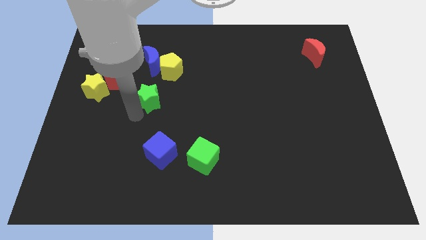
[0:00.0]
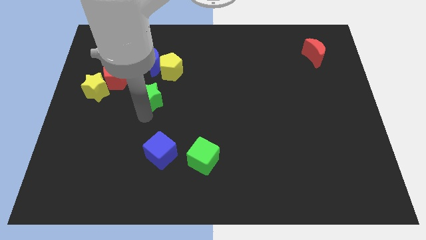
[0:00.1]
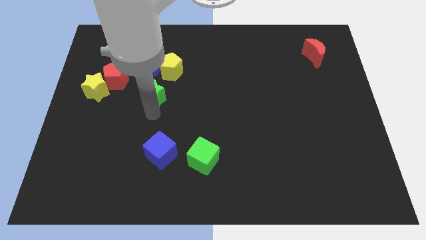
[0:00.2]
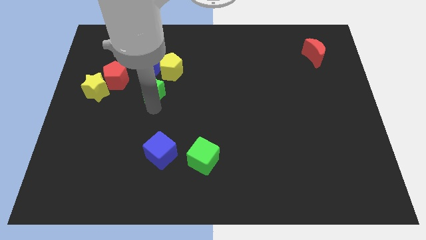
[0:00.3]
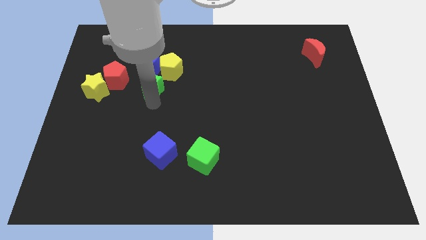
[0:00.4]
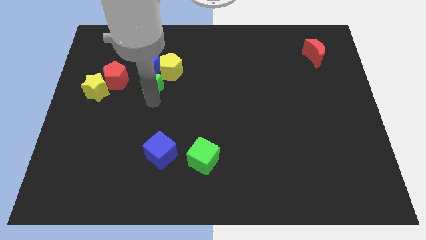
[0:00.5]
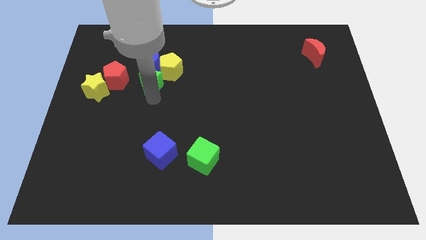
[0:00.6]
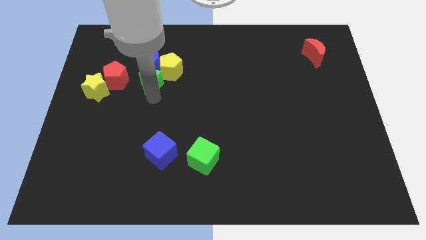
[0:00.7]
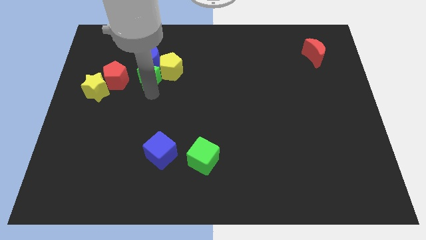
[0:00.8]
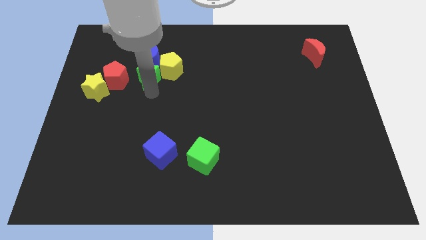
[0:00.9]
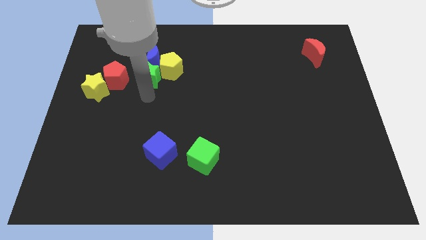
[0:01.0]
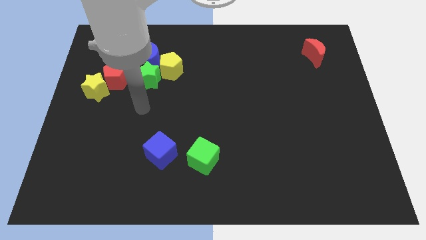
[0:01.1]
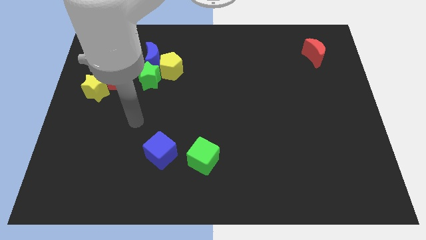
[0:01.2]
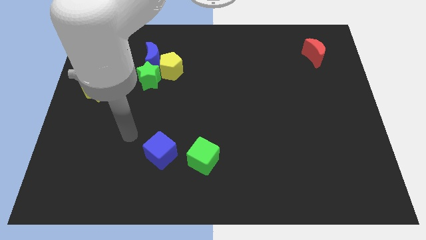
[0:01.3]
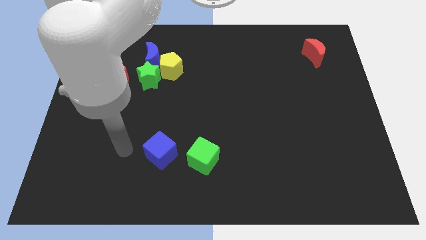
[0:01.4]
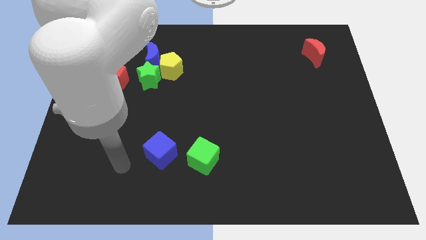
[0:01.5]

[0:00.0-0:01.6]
slide the green star to the bottom side of the blue crescent

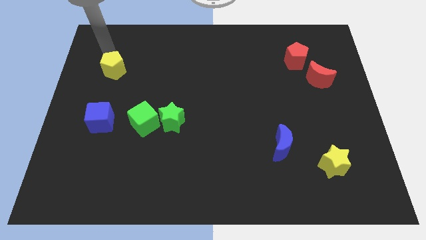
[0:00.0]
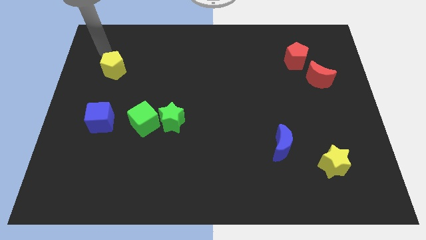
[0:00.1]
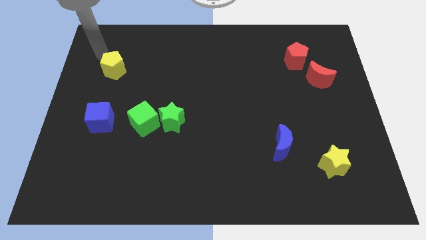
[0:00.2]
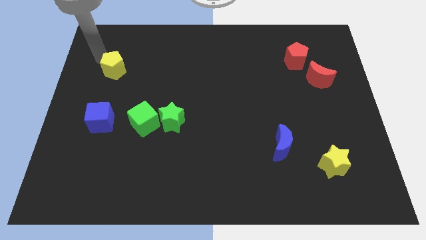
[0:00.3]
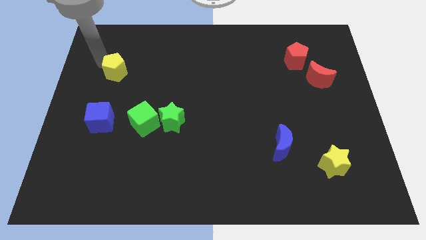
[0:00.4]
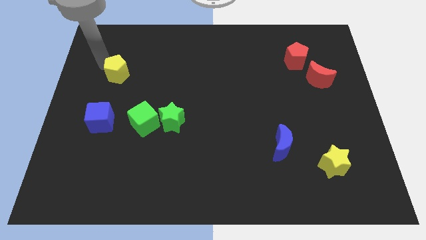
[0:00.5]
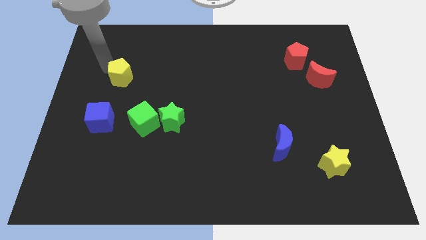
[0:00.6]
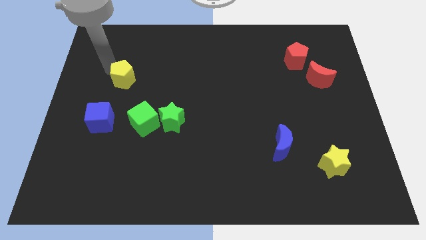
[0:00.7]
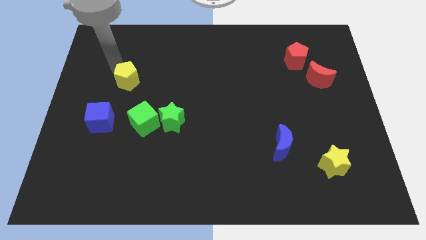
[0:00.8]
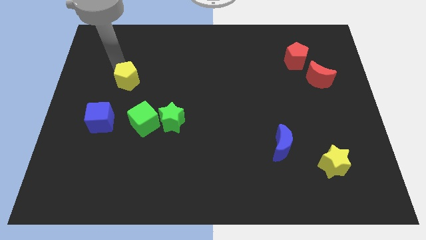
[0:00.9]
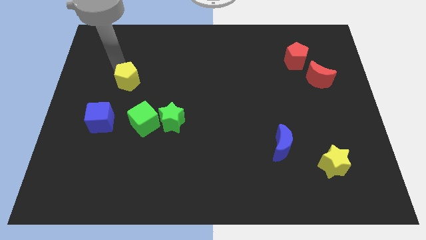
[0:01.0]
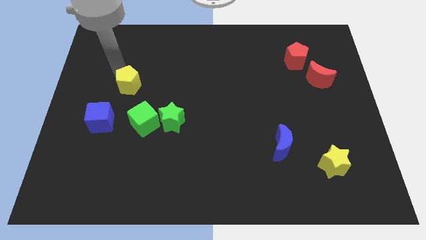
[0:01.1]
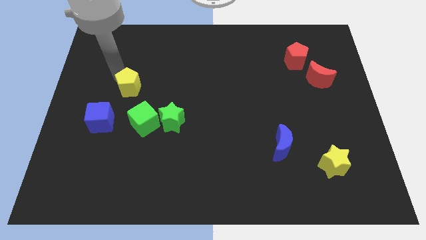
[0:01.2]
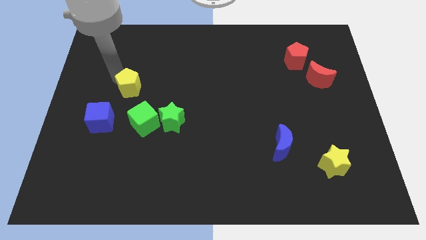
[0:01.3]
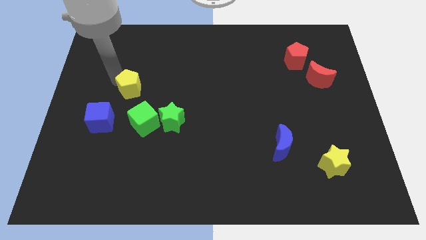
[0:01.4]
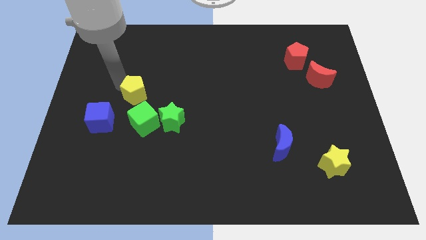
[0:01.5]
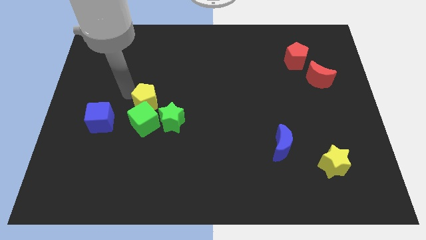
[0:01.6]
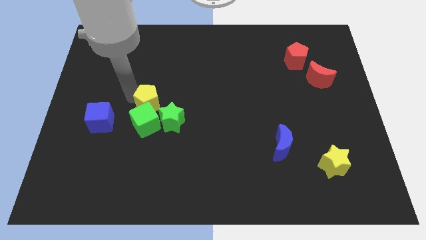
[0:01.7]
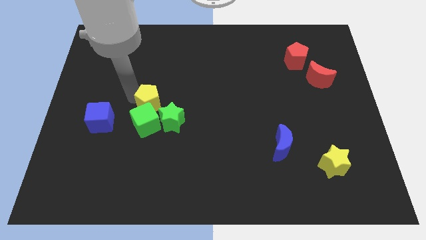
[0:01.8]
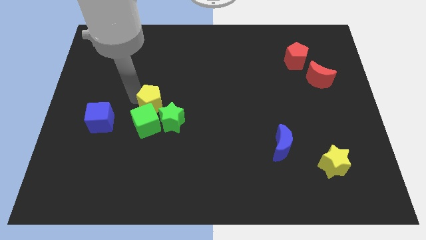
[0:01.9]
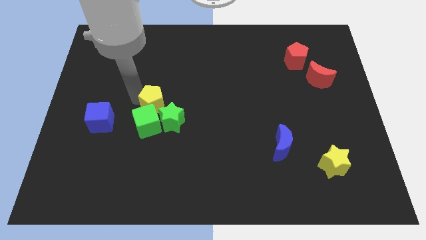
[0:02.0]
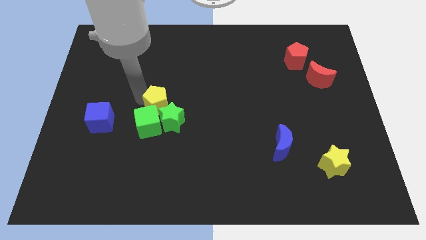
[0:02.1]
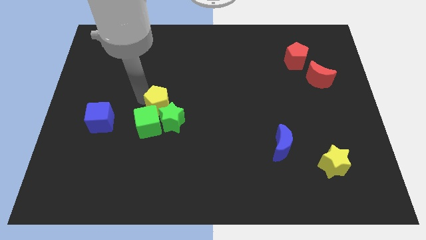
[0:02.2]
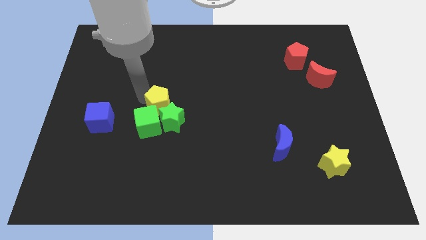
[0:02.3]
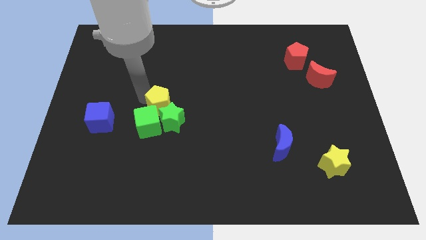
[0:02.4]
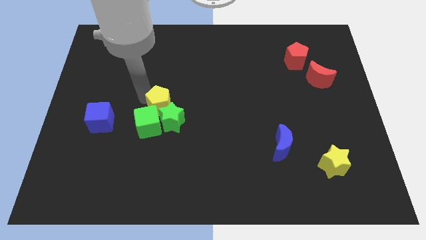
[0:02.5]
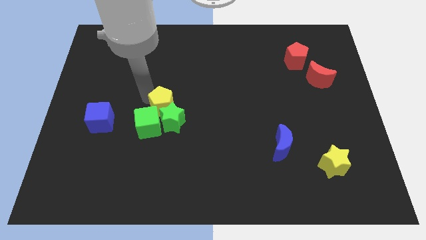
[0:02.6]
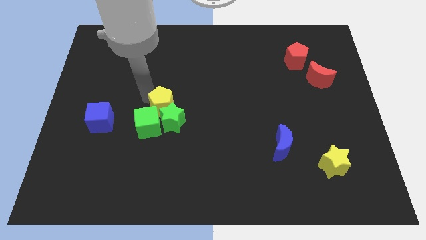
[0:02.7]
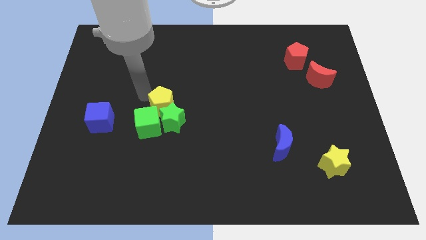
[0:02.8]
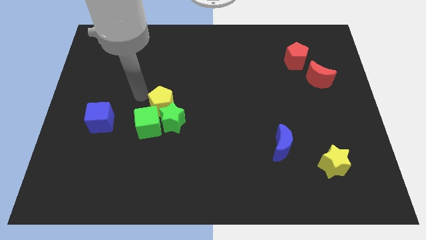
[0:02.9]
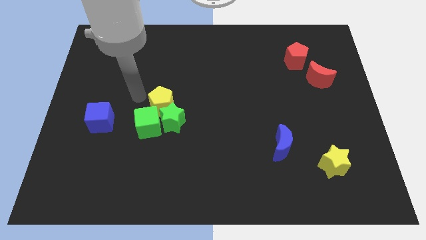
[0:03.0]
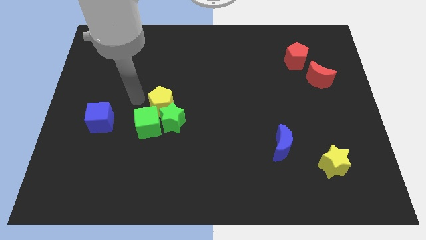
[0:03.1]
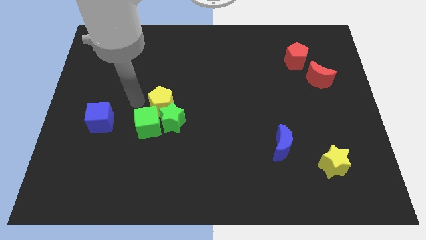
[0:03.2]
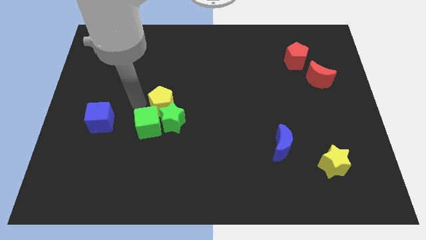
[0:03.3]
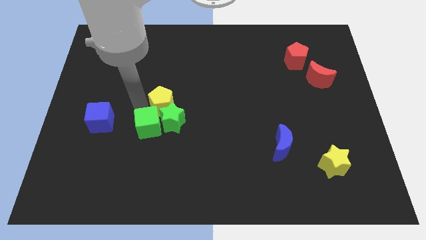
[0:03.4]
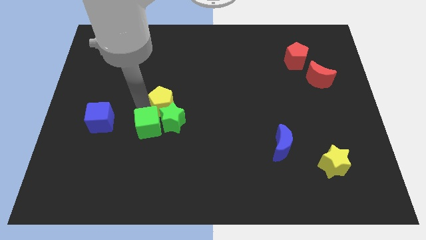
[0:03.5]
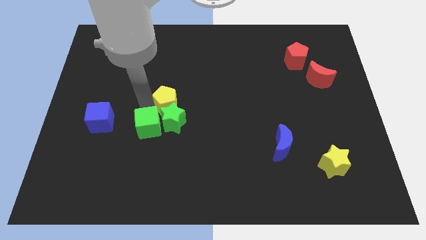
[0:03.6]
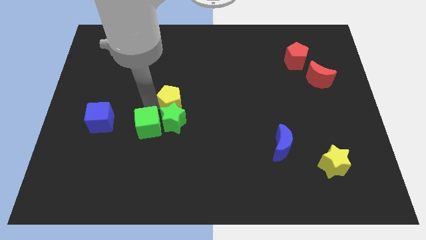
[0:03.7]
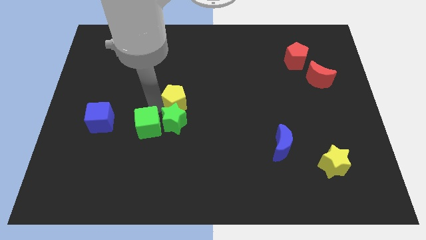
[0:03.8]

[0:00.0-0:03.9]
put the yellow pentagon vertically above the green star

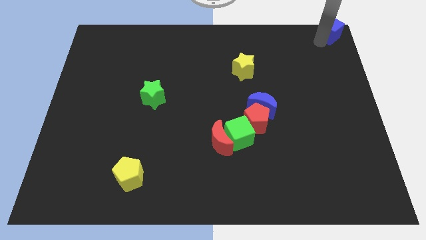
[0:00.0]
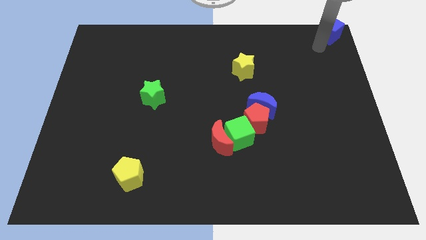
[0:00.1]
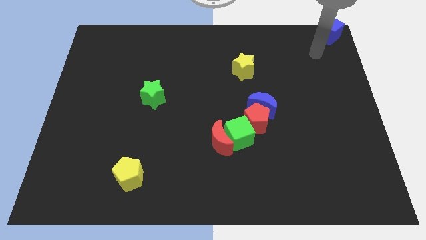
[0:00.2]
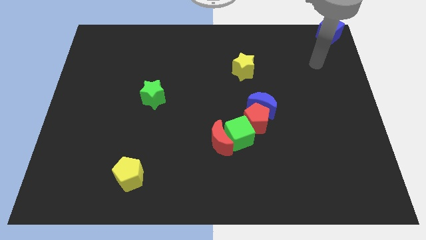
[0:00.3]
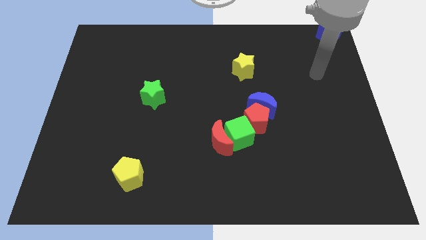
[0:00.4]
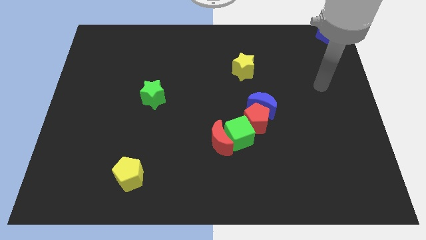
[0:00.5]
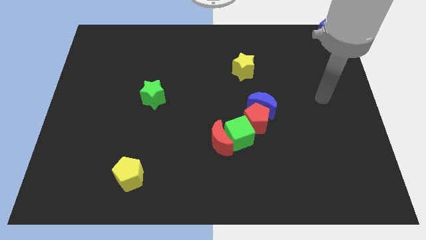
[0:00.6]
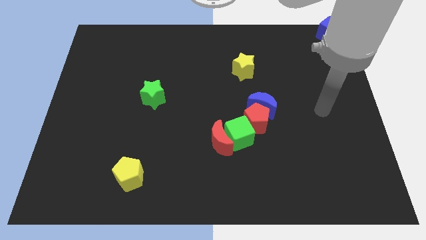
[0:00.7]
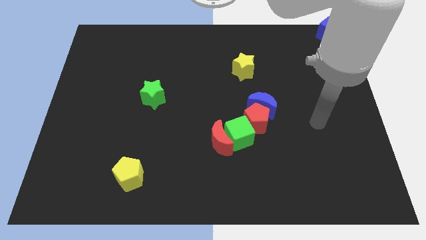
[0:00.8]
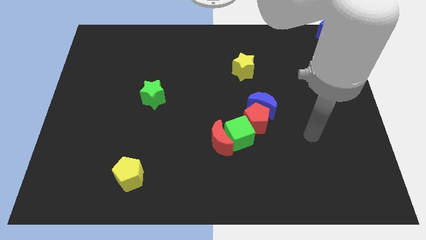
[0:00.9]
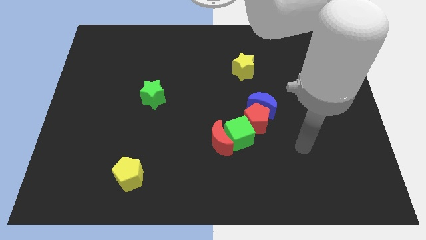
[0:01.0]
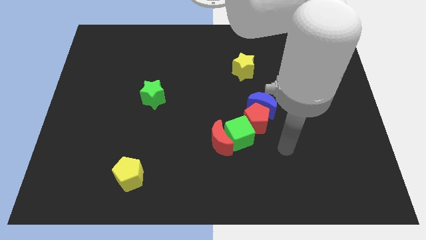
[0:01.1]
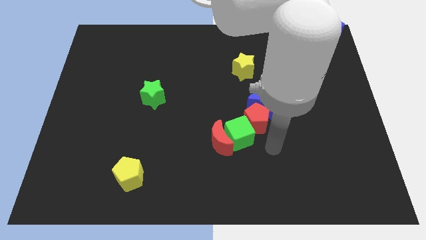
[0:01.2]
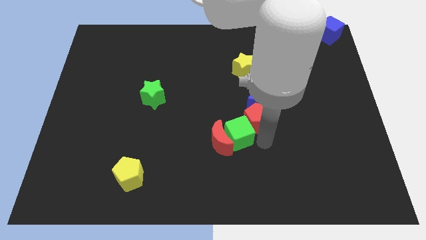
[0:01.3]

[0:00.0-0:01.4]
move your hand away from the blue cube

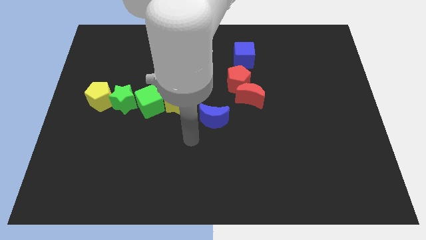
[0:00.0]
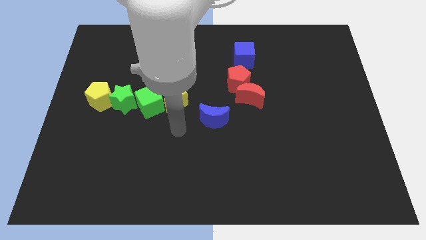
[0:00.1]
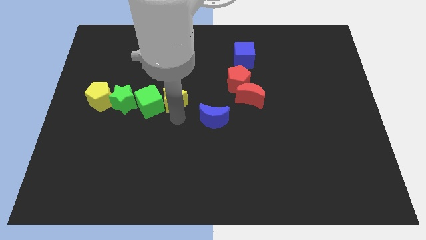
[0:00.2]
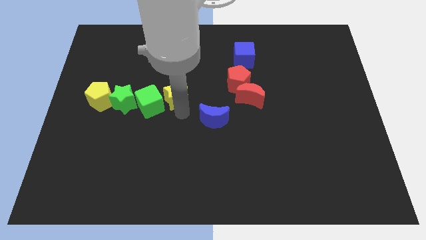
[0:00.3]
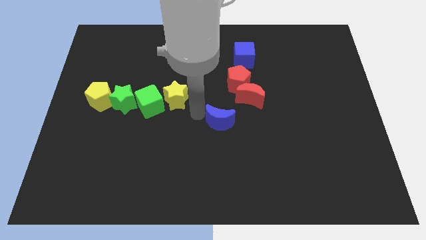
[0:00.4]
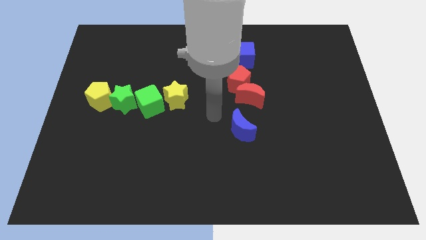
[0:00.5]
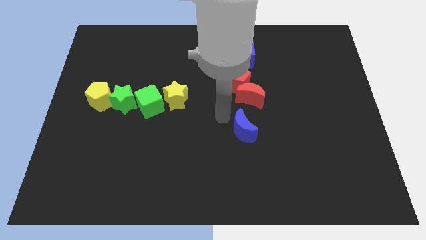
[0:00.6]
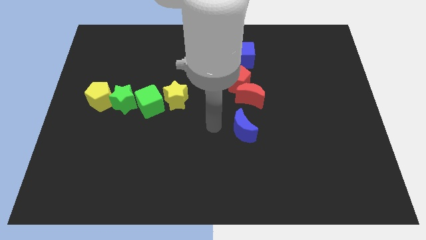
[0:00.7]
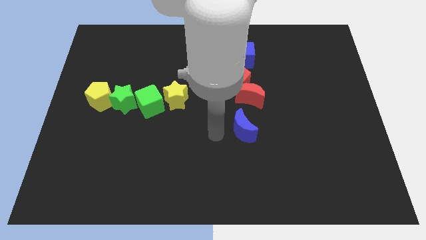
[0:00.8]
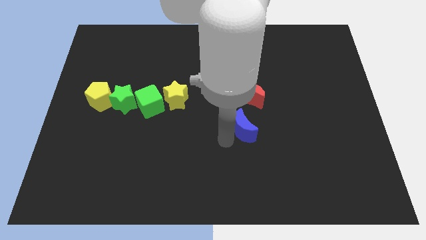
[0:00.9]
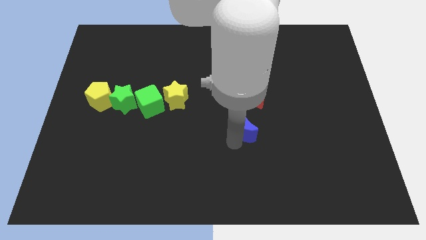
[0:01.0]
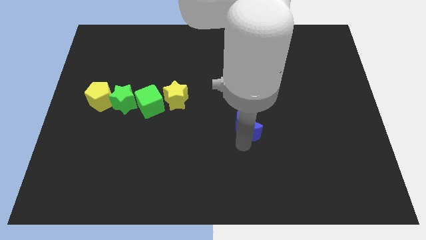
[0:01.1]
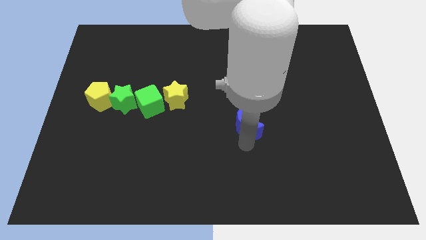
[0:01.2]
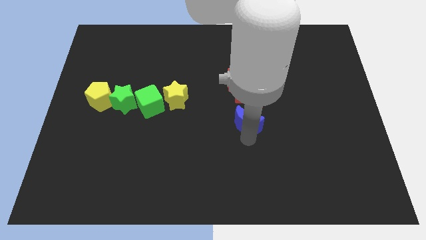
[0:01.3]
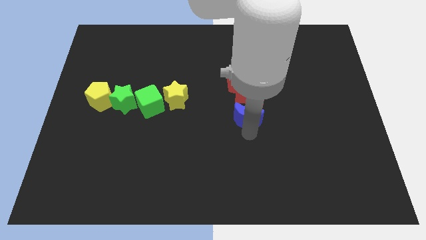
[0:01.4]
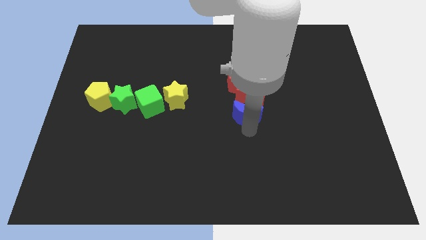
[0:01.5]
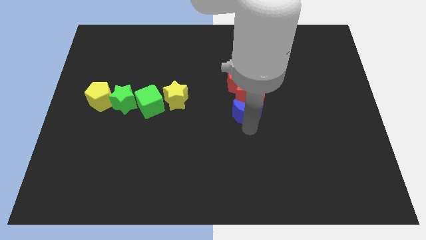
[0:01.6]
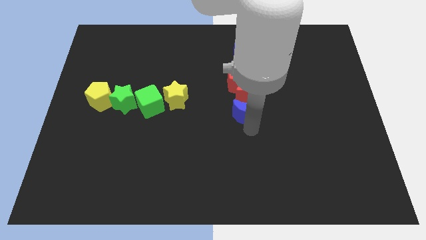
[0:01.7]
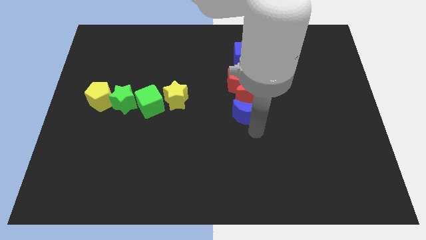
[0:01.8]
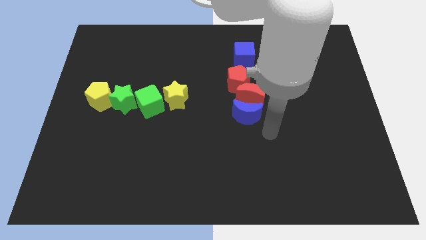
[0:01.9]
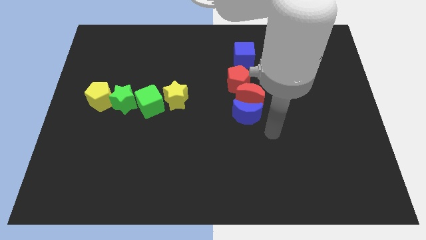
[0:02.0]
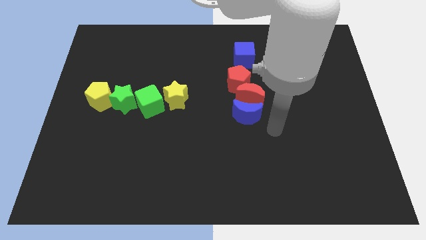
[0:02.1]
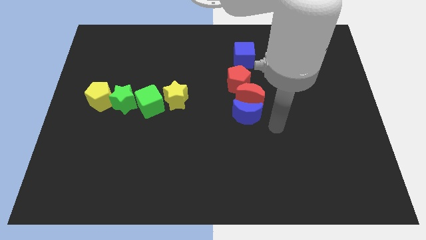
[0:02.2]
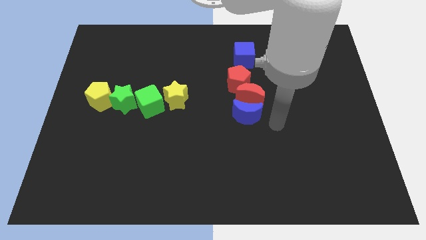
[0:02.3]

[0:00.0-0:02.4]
align blue crescent with red moon
